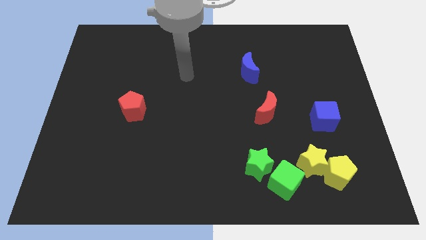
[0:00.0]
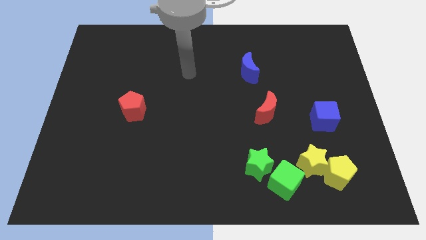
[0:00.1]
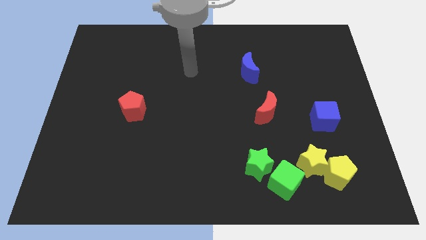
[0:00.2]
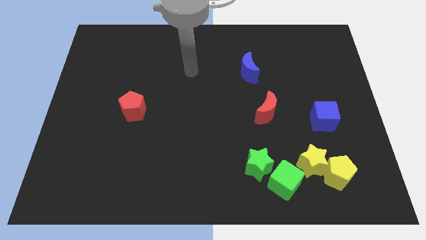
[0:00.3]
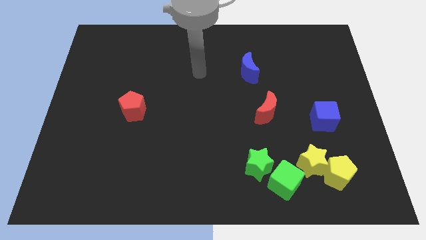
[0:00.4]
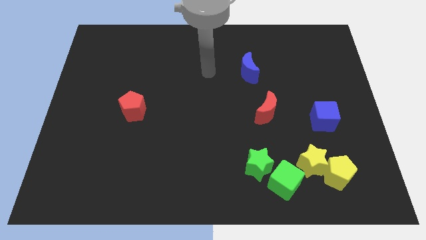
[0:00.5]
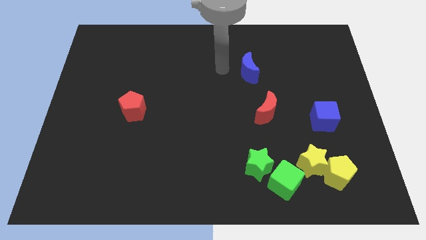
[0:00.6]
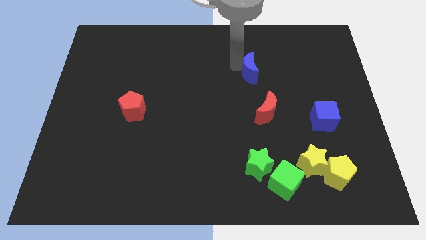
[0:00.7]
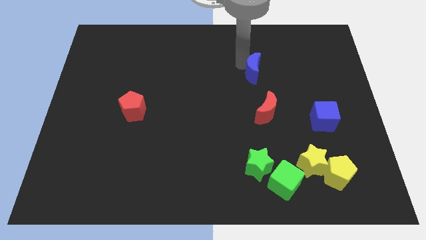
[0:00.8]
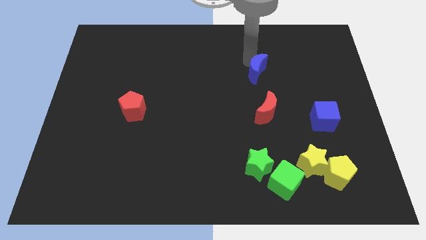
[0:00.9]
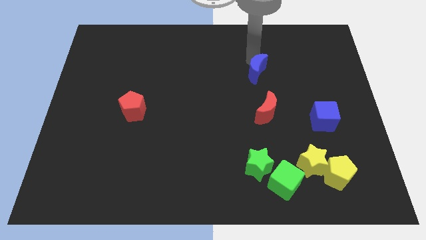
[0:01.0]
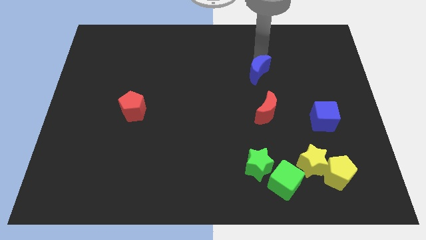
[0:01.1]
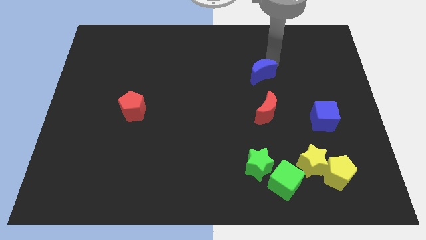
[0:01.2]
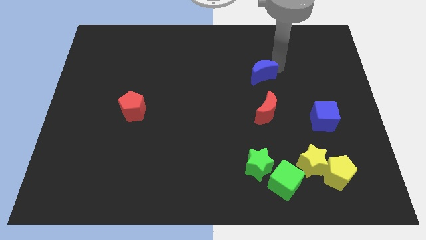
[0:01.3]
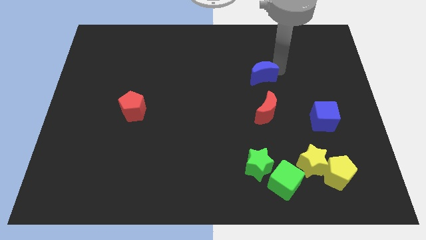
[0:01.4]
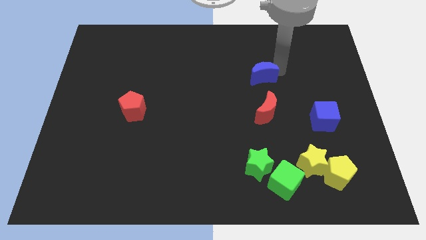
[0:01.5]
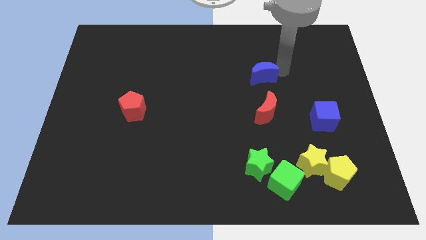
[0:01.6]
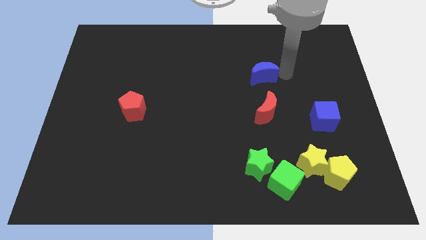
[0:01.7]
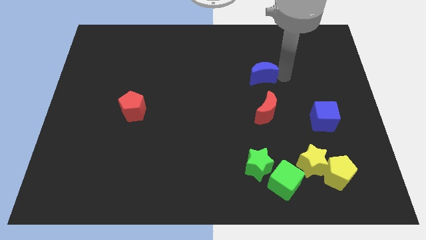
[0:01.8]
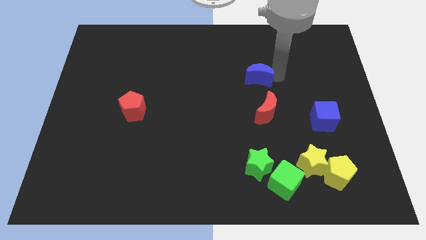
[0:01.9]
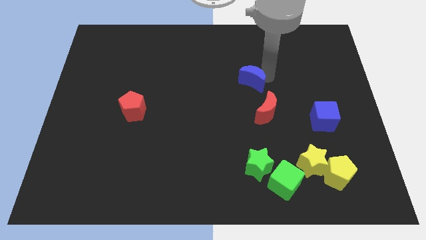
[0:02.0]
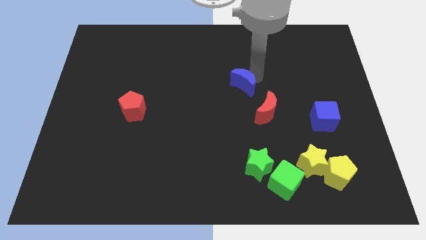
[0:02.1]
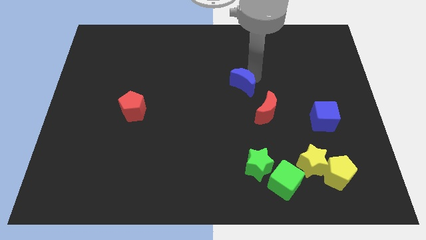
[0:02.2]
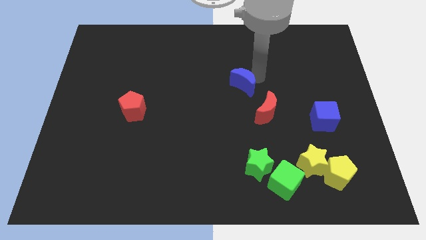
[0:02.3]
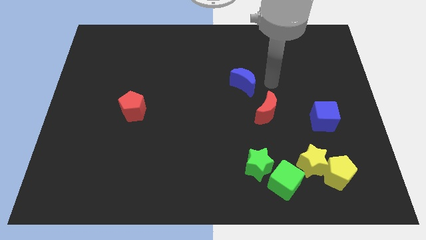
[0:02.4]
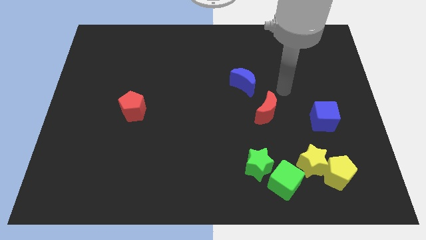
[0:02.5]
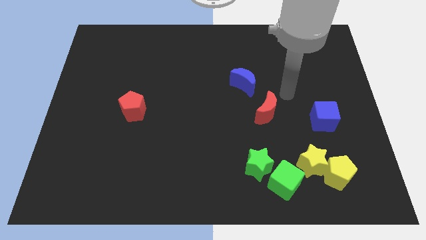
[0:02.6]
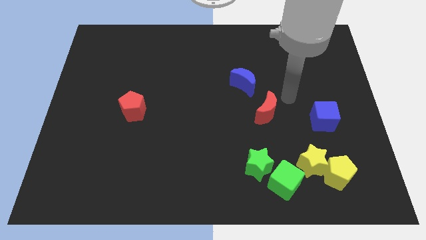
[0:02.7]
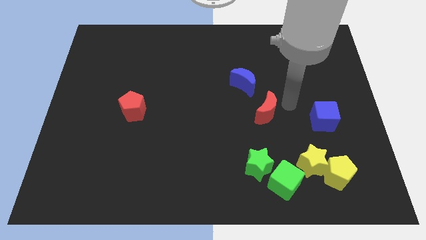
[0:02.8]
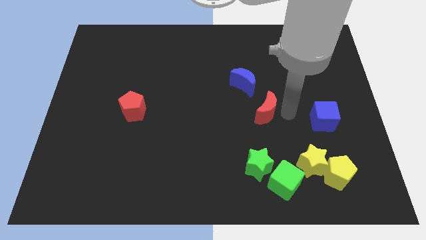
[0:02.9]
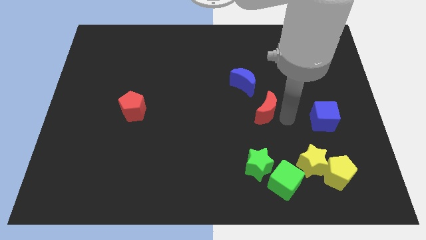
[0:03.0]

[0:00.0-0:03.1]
slide the blue moon towards the red moon

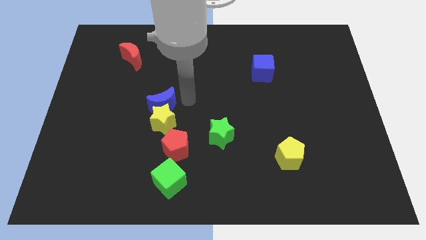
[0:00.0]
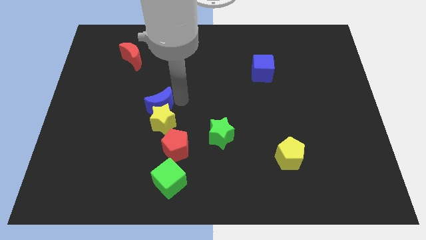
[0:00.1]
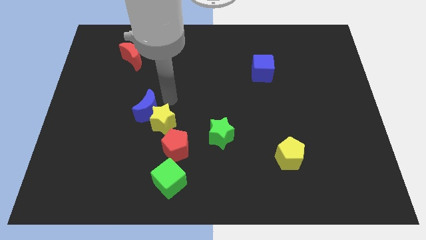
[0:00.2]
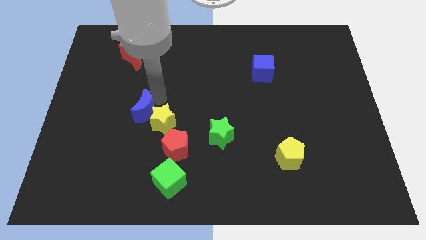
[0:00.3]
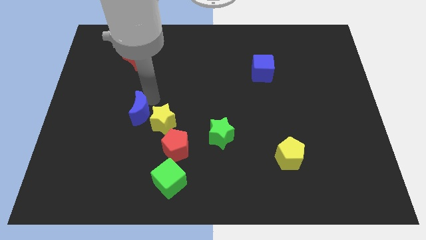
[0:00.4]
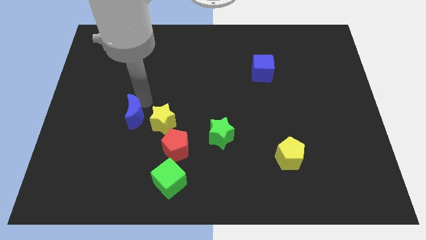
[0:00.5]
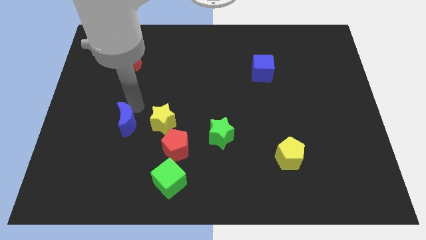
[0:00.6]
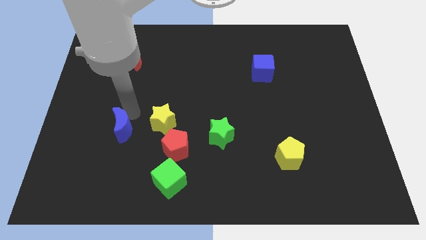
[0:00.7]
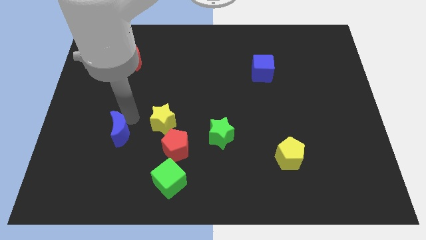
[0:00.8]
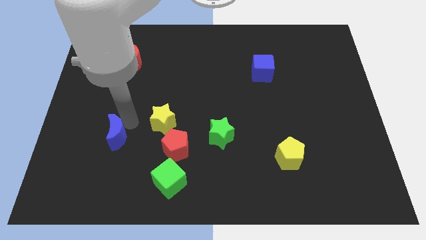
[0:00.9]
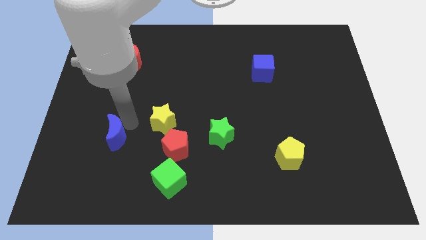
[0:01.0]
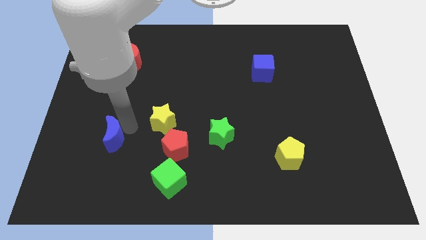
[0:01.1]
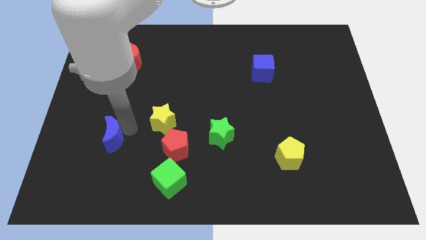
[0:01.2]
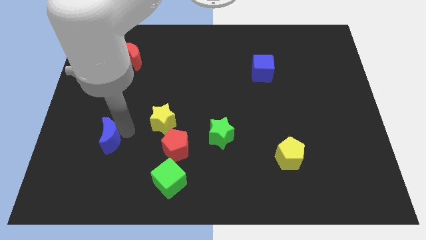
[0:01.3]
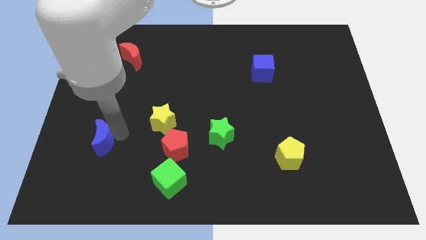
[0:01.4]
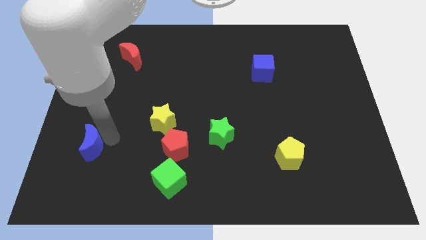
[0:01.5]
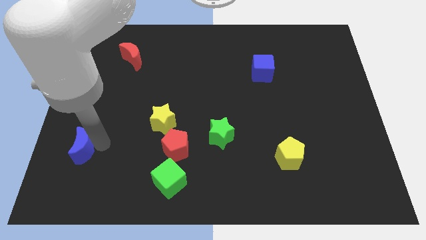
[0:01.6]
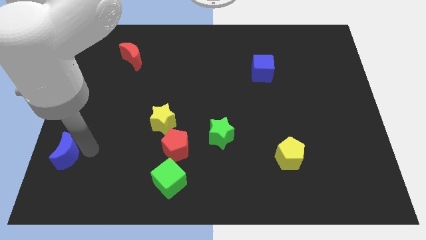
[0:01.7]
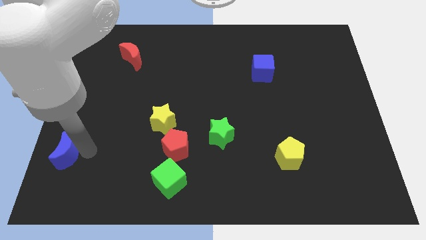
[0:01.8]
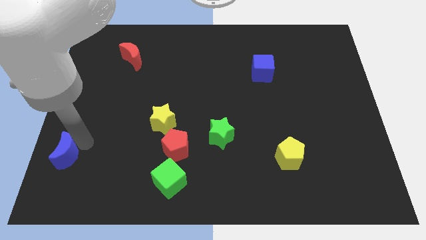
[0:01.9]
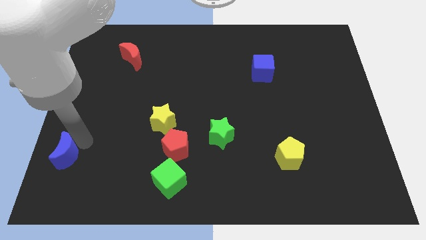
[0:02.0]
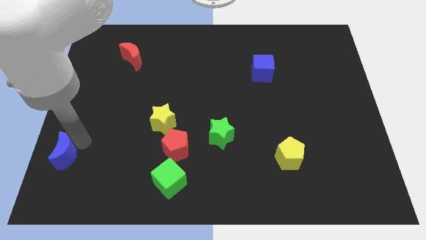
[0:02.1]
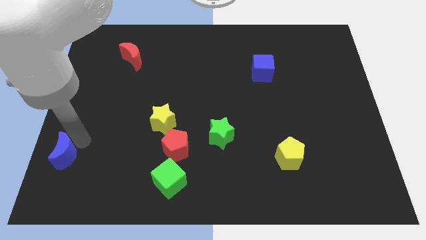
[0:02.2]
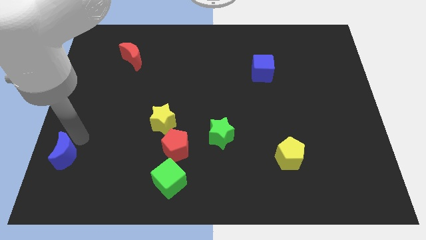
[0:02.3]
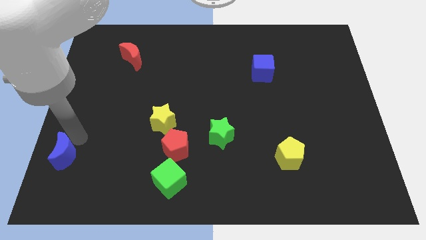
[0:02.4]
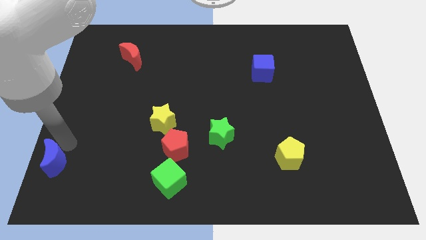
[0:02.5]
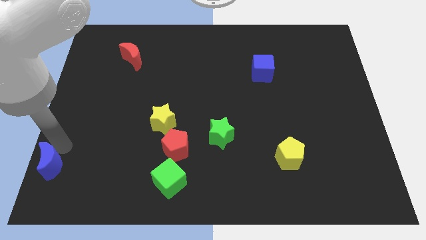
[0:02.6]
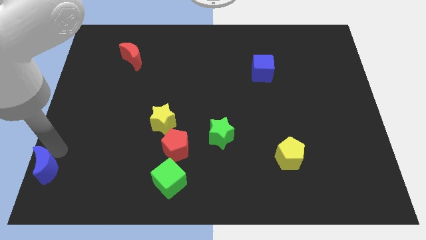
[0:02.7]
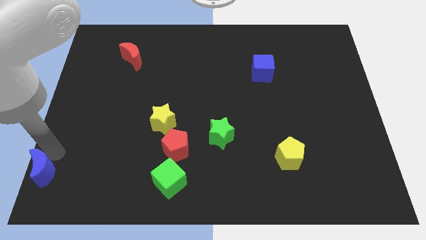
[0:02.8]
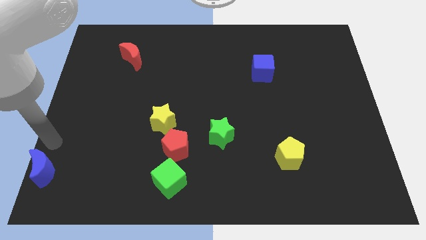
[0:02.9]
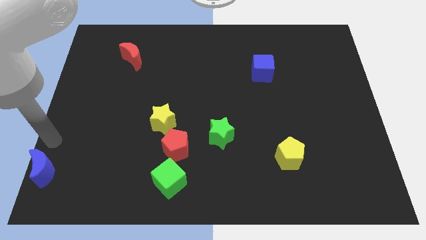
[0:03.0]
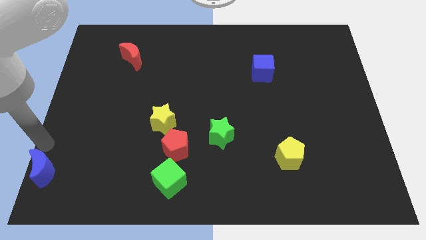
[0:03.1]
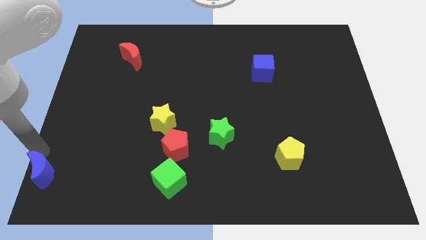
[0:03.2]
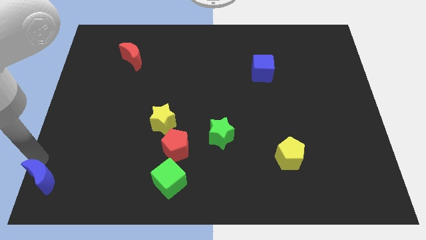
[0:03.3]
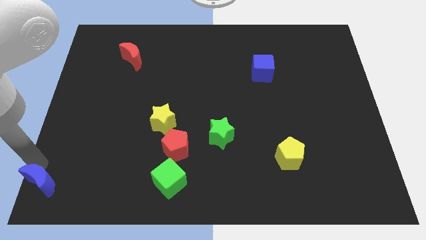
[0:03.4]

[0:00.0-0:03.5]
separate blue crescent from yellow star

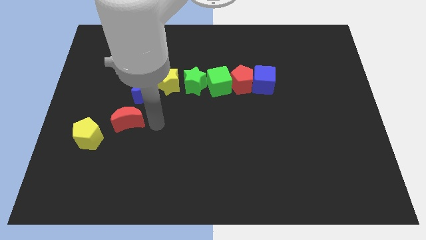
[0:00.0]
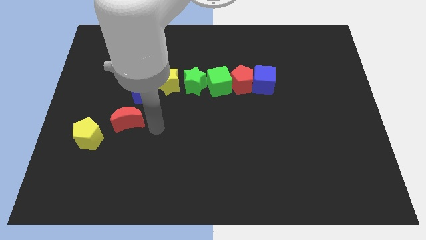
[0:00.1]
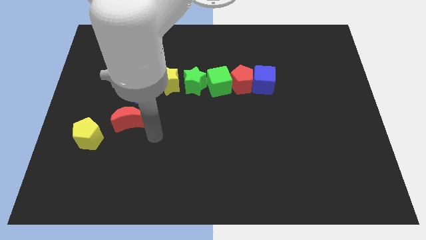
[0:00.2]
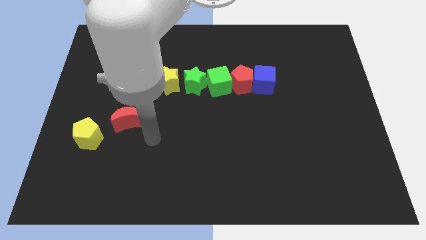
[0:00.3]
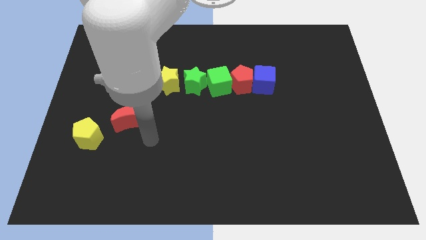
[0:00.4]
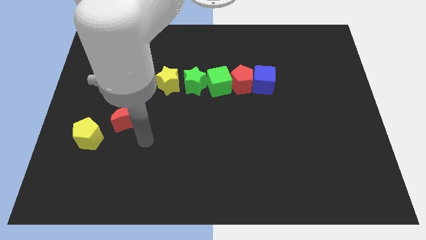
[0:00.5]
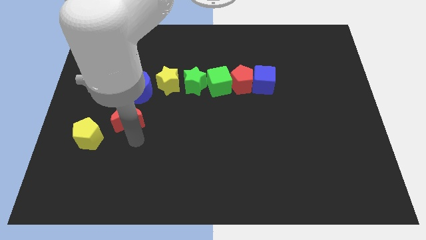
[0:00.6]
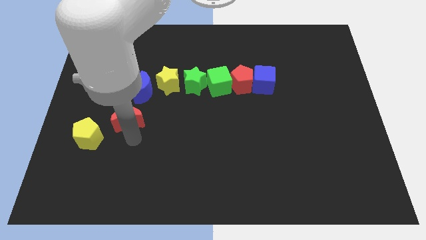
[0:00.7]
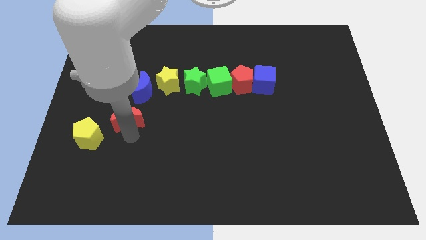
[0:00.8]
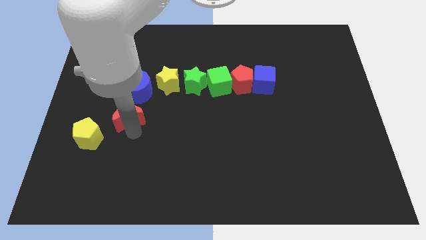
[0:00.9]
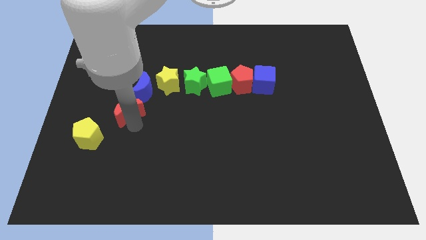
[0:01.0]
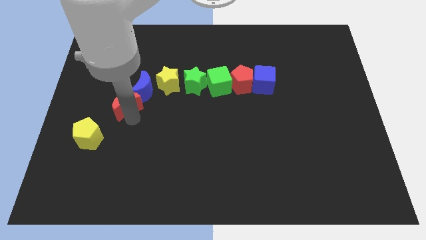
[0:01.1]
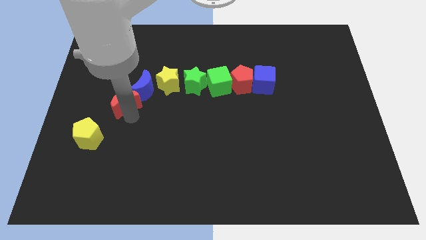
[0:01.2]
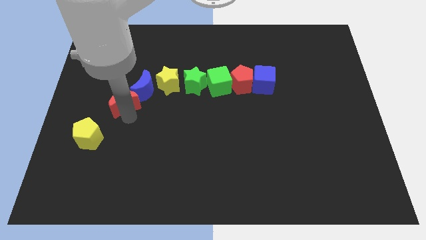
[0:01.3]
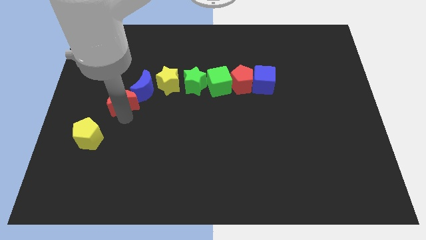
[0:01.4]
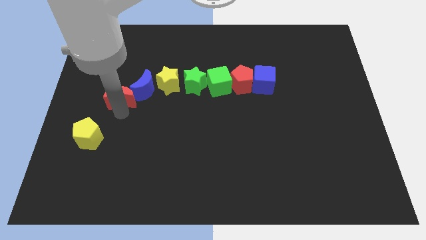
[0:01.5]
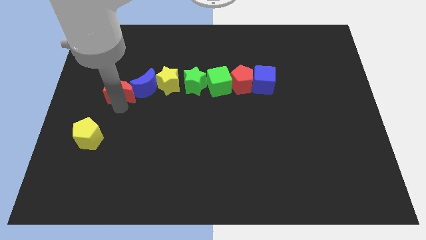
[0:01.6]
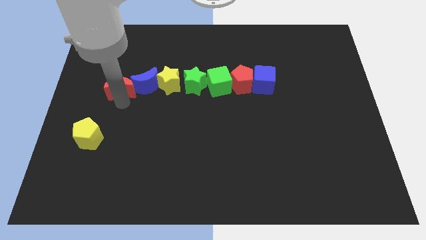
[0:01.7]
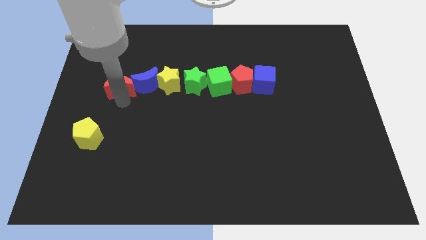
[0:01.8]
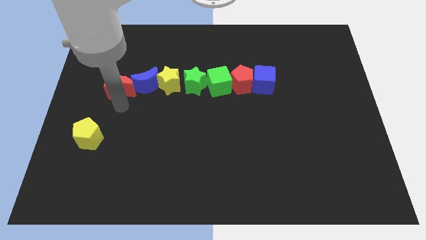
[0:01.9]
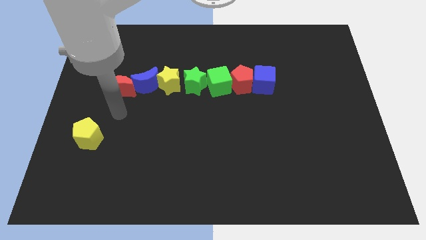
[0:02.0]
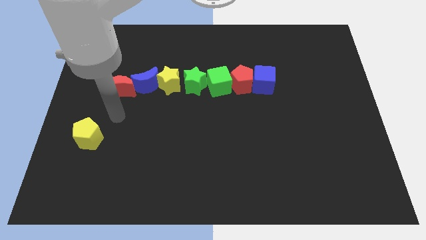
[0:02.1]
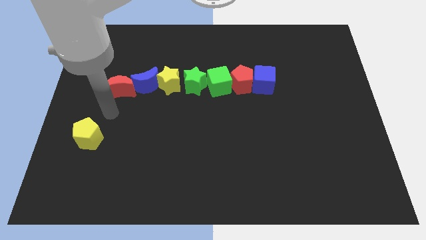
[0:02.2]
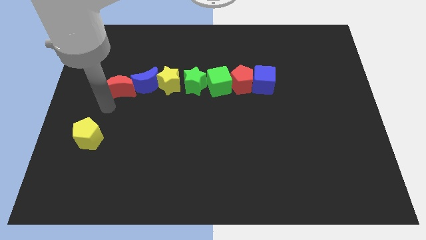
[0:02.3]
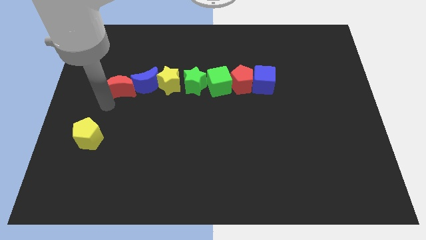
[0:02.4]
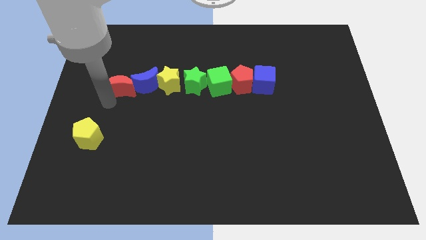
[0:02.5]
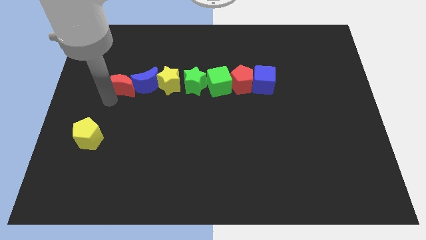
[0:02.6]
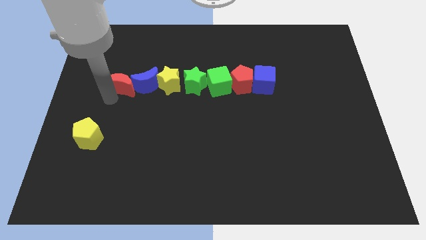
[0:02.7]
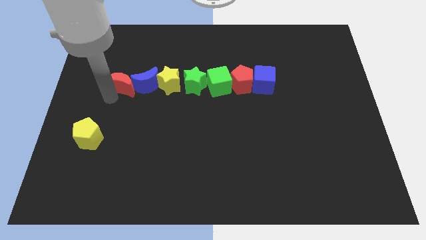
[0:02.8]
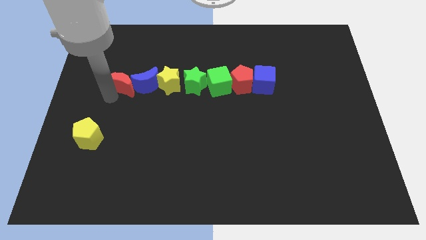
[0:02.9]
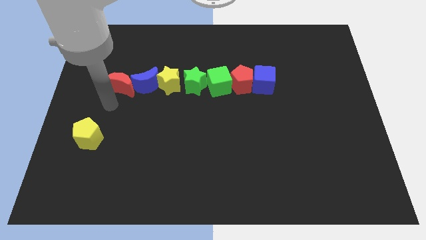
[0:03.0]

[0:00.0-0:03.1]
move red moon into blue moon
